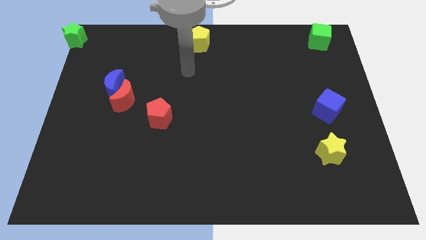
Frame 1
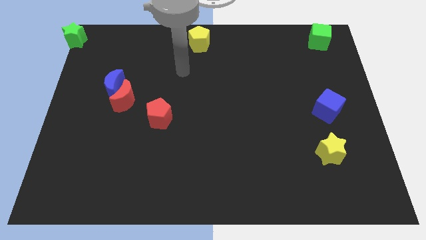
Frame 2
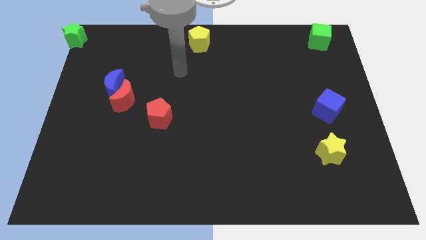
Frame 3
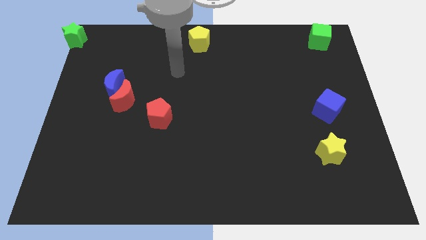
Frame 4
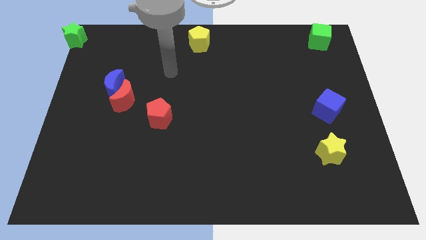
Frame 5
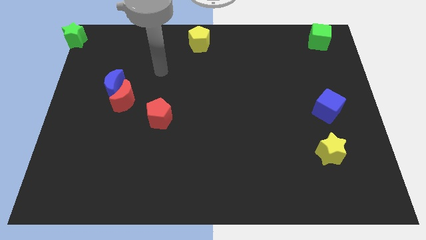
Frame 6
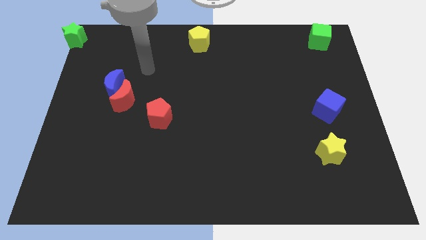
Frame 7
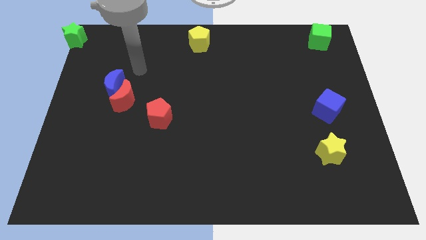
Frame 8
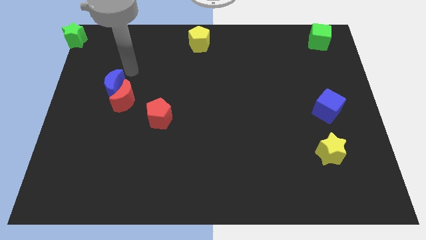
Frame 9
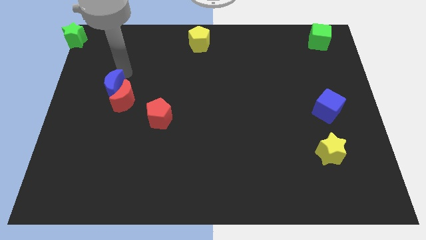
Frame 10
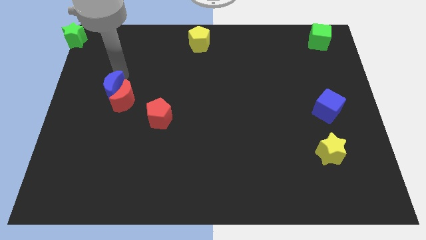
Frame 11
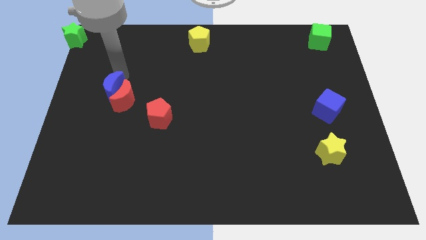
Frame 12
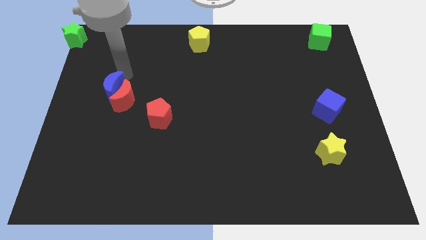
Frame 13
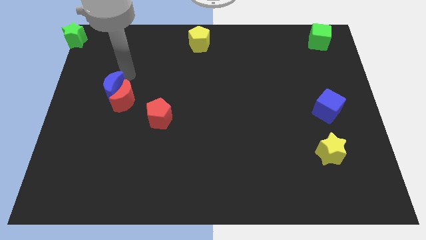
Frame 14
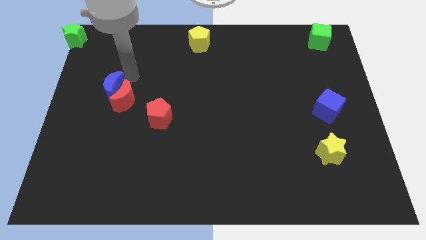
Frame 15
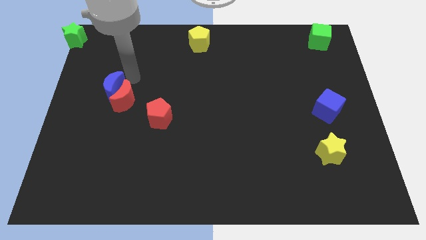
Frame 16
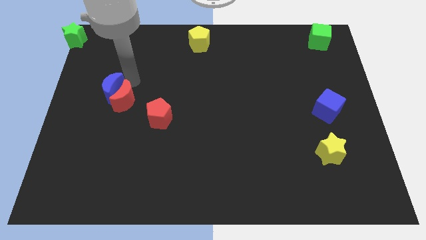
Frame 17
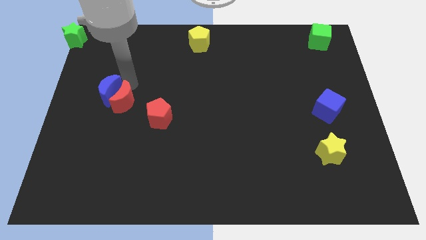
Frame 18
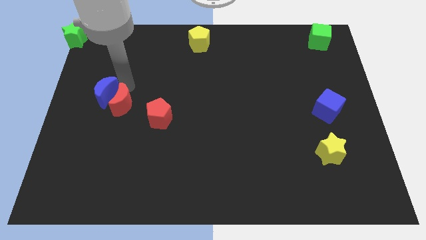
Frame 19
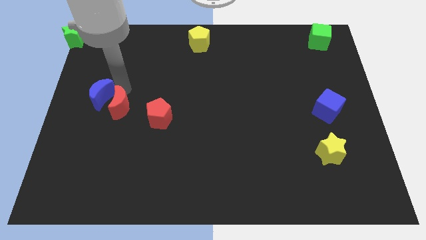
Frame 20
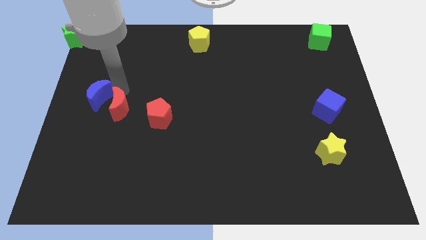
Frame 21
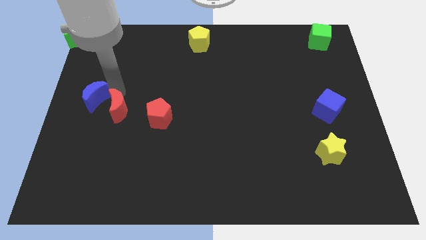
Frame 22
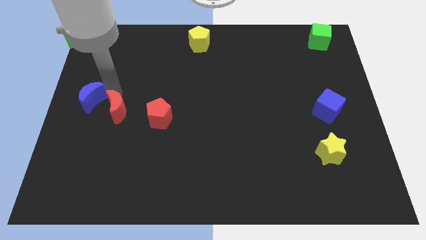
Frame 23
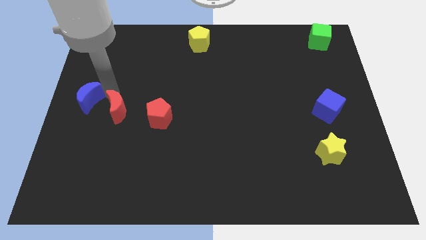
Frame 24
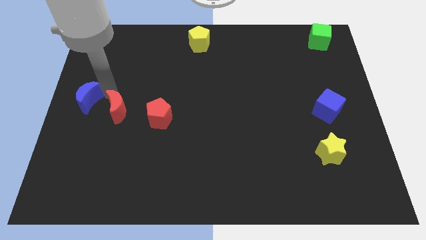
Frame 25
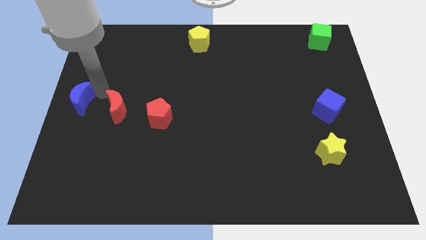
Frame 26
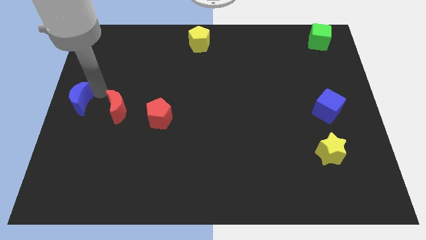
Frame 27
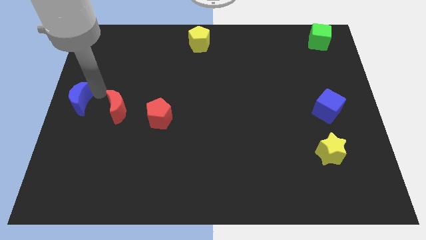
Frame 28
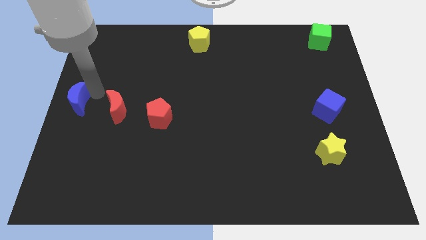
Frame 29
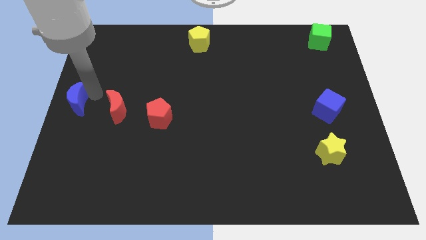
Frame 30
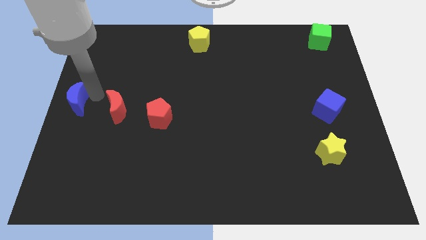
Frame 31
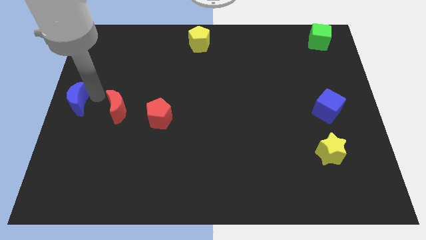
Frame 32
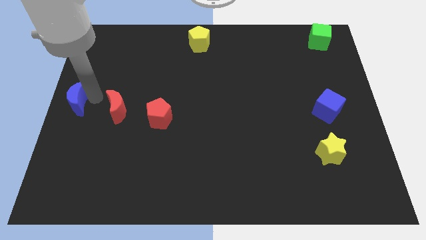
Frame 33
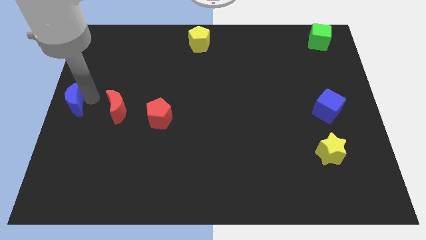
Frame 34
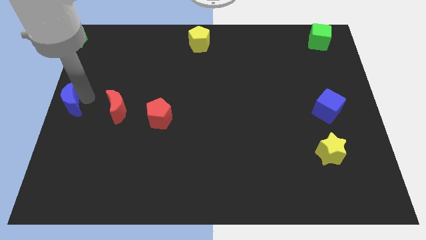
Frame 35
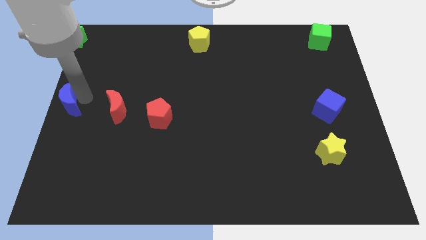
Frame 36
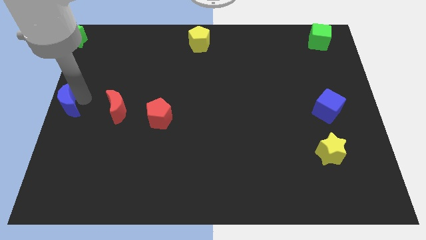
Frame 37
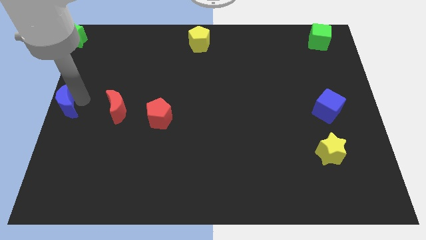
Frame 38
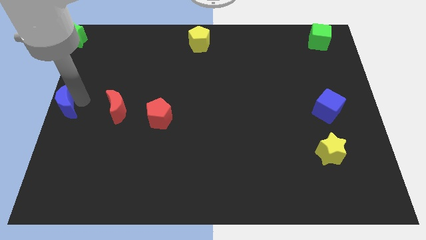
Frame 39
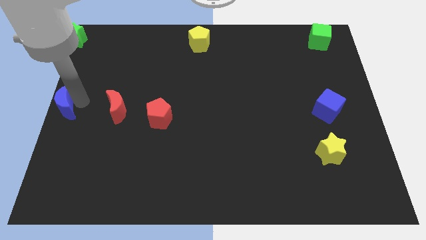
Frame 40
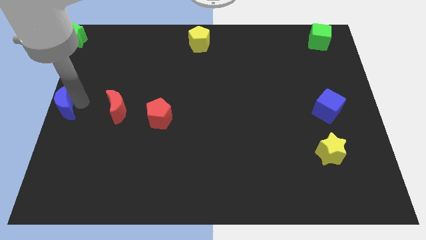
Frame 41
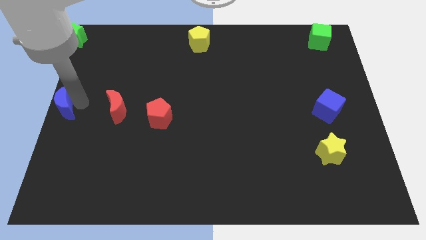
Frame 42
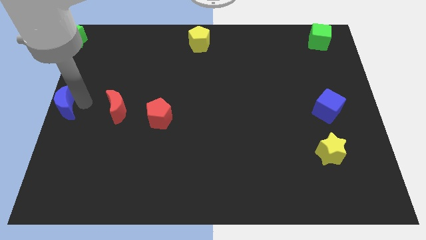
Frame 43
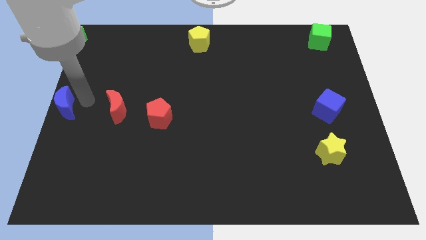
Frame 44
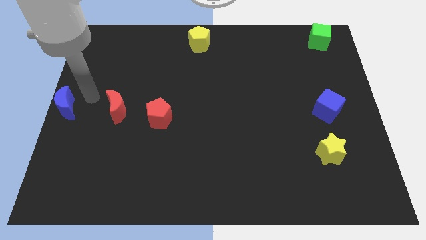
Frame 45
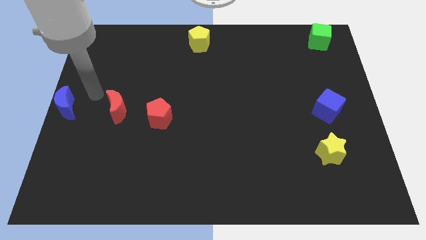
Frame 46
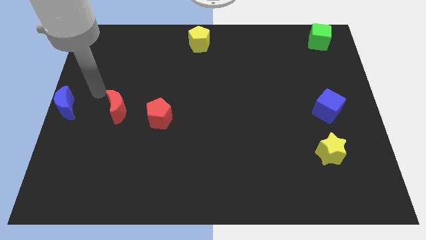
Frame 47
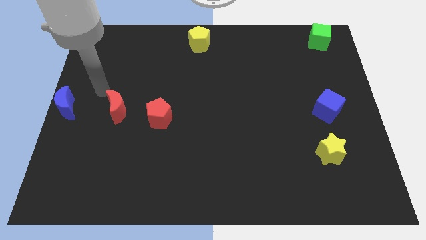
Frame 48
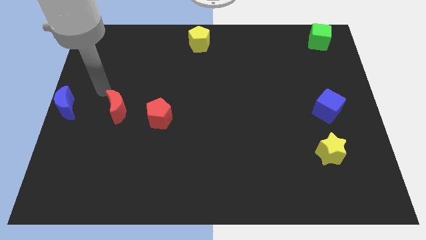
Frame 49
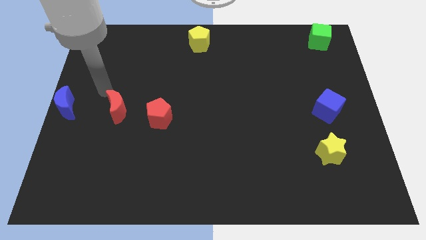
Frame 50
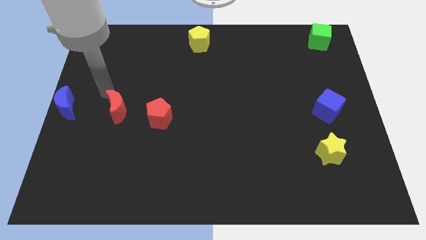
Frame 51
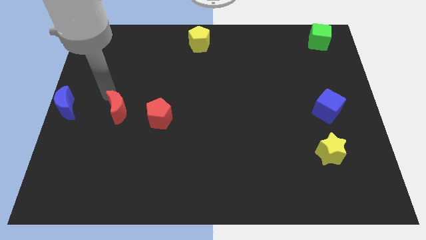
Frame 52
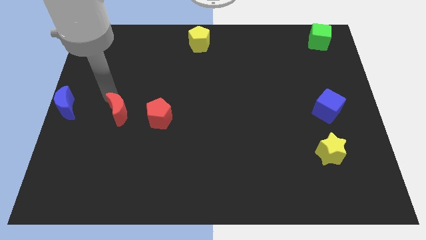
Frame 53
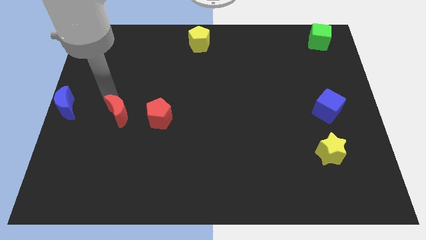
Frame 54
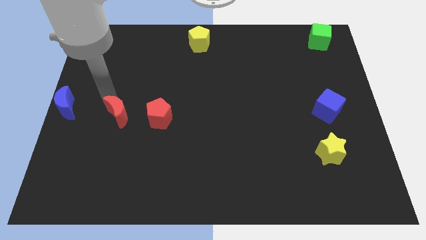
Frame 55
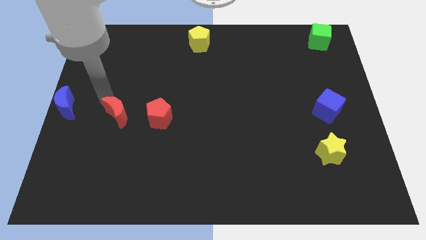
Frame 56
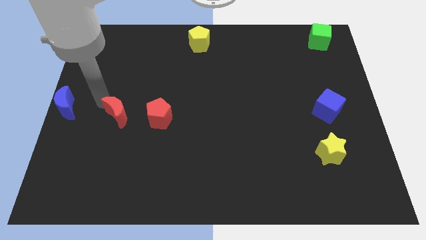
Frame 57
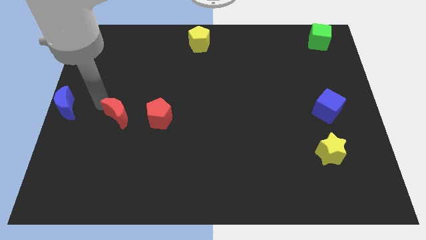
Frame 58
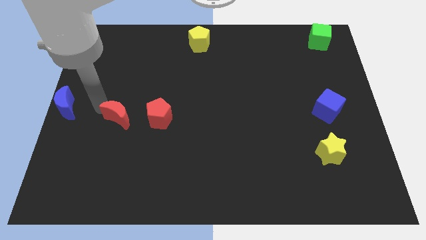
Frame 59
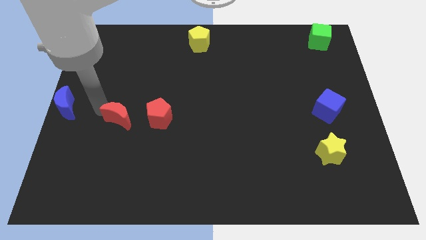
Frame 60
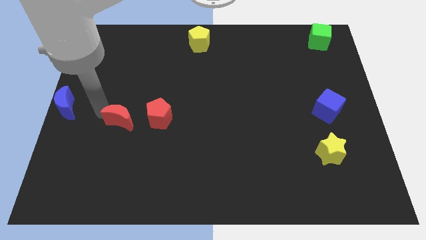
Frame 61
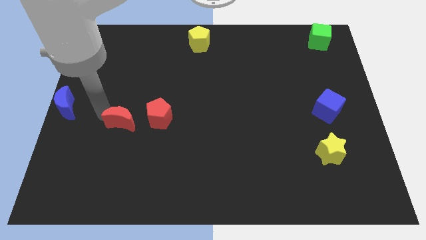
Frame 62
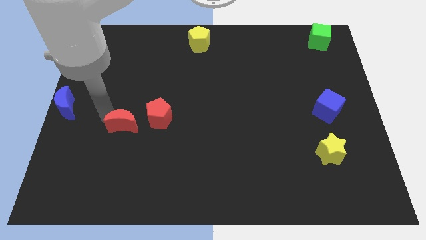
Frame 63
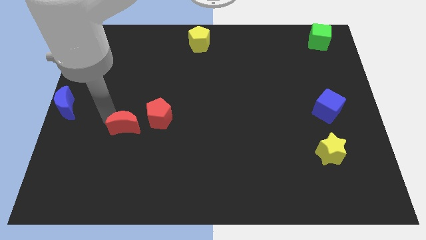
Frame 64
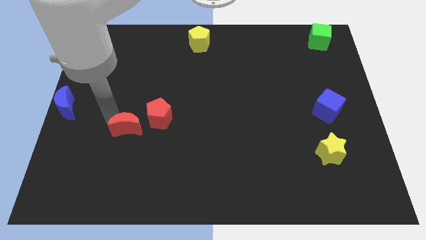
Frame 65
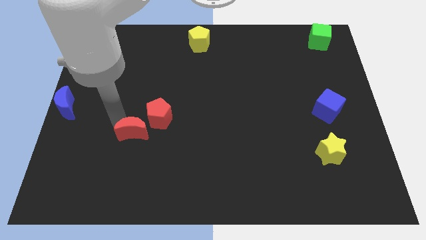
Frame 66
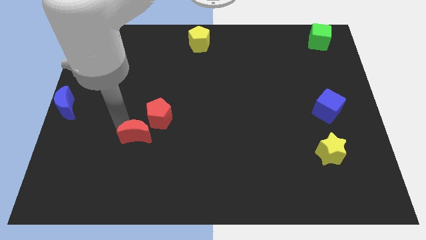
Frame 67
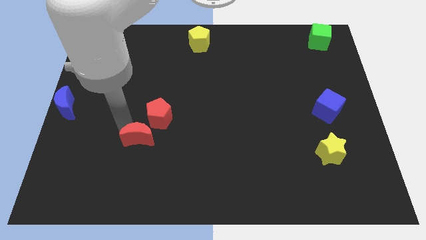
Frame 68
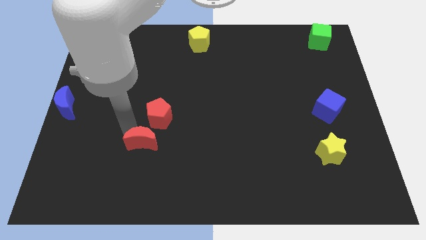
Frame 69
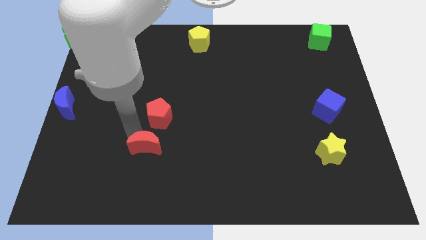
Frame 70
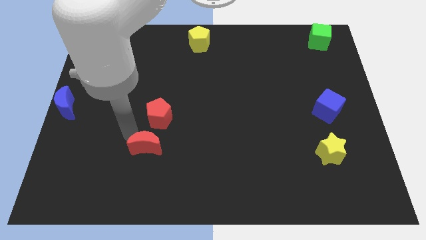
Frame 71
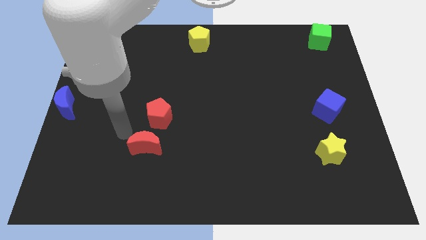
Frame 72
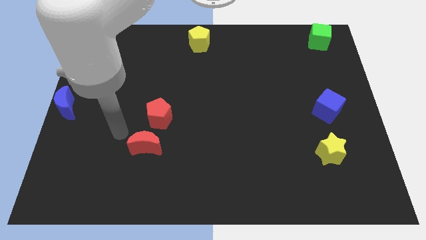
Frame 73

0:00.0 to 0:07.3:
separate the red crescent from the blue crescent

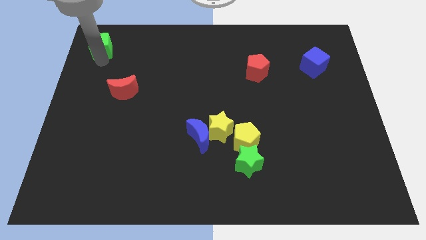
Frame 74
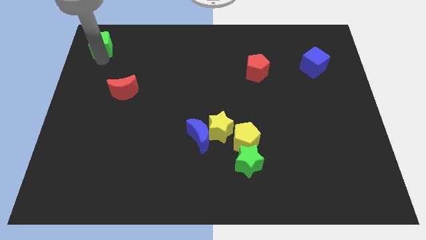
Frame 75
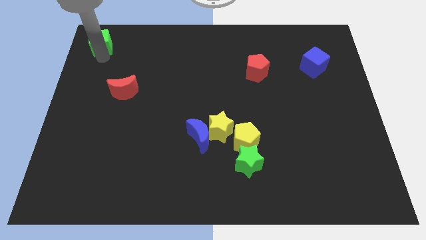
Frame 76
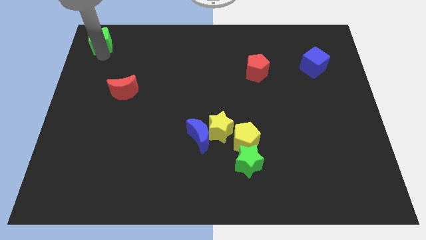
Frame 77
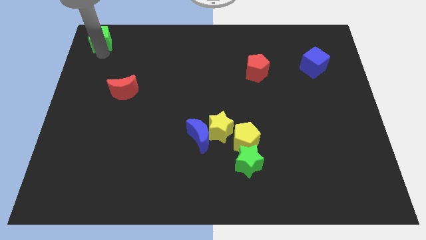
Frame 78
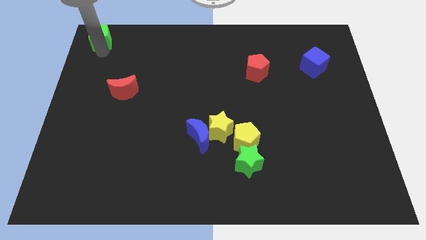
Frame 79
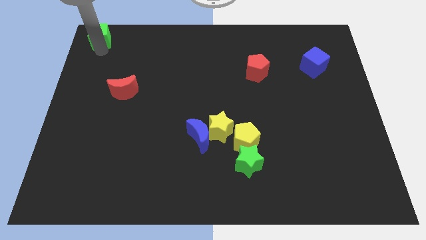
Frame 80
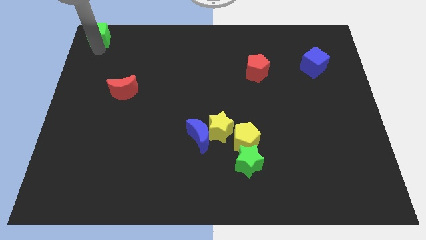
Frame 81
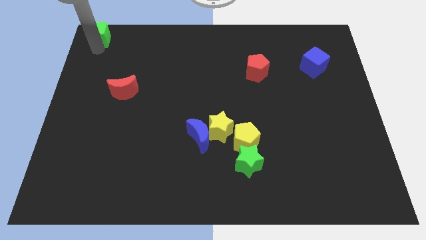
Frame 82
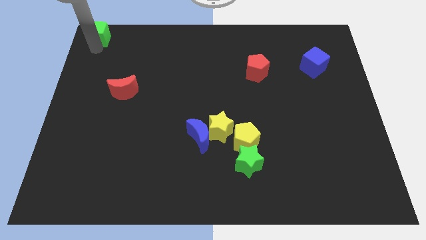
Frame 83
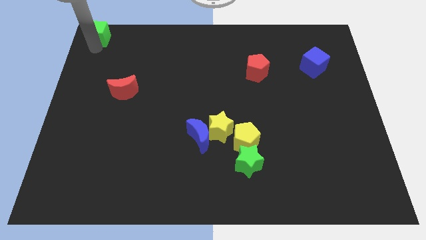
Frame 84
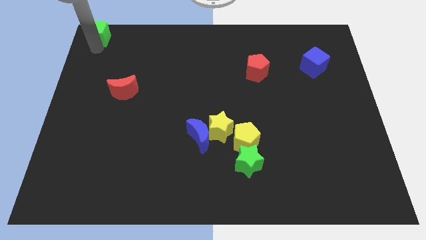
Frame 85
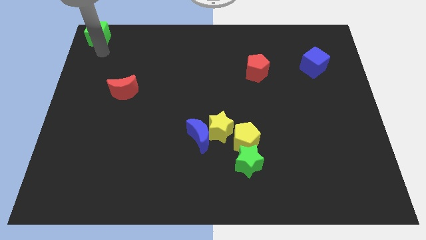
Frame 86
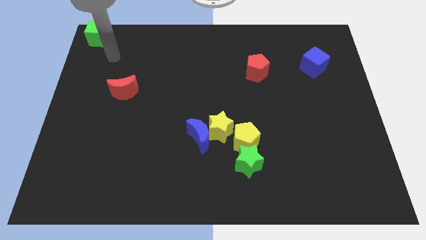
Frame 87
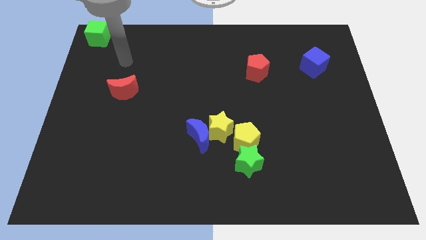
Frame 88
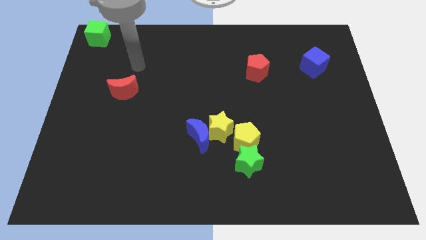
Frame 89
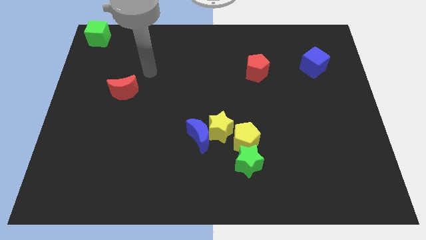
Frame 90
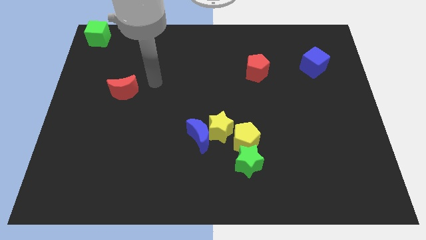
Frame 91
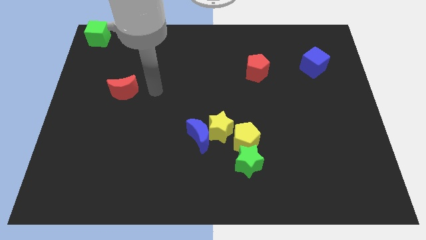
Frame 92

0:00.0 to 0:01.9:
push the green cube to the top left corner of the board
